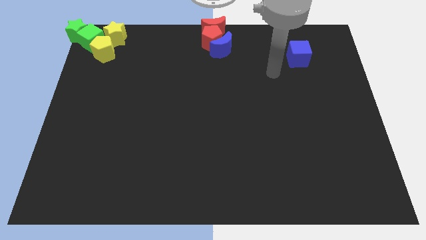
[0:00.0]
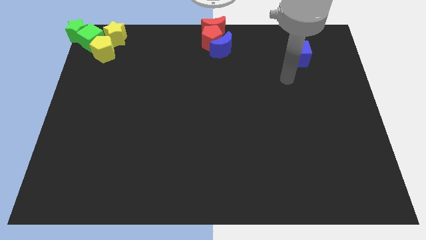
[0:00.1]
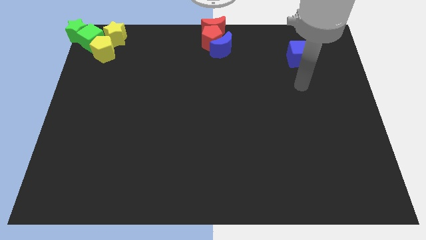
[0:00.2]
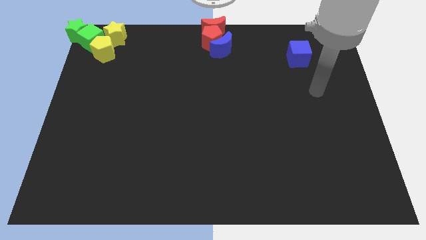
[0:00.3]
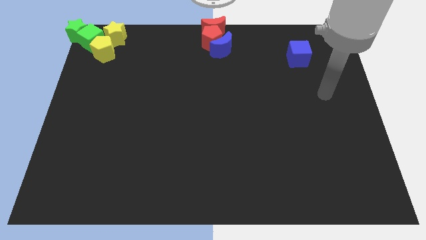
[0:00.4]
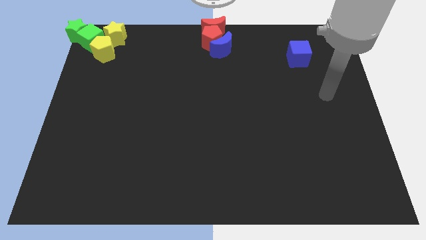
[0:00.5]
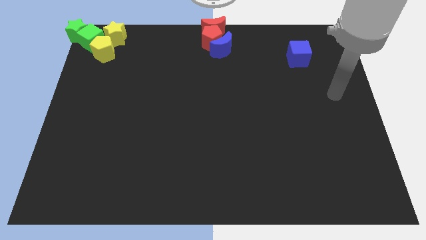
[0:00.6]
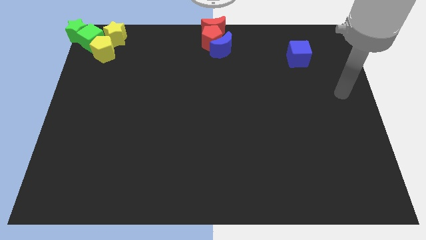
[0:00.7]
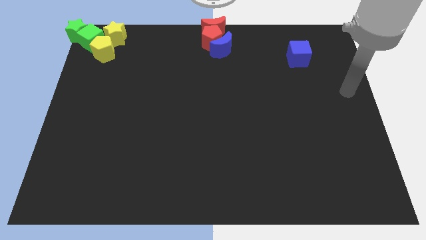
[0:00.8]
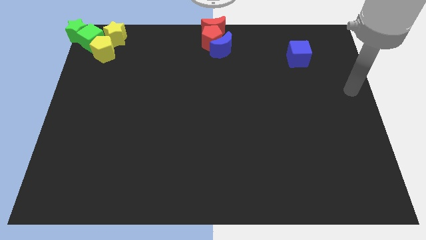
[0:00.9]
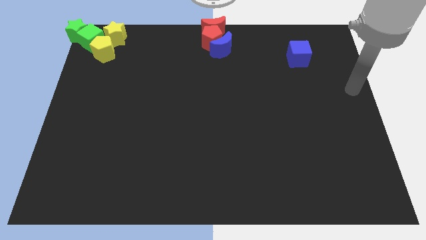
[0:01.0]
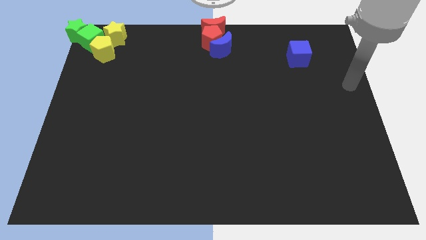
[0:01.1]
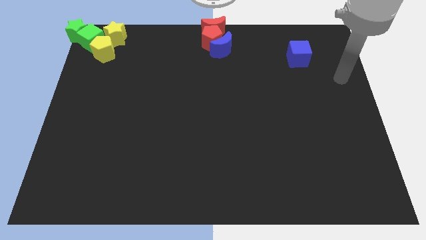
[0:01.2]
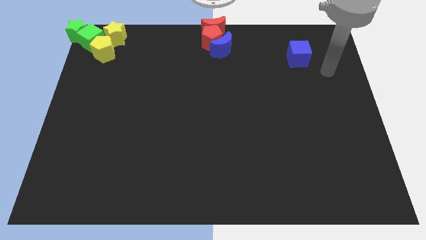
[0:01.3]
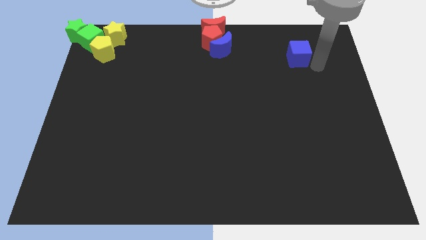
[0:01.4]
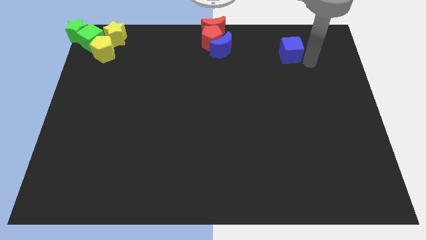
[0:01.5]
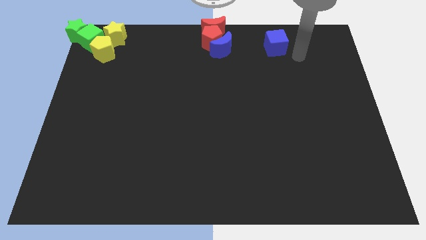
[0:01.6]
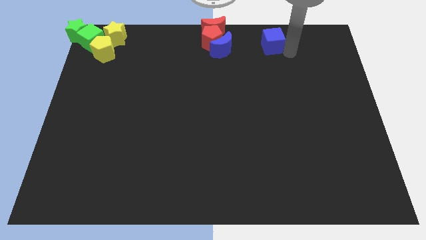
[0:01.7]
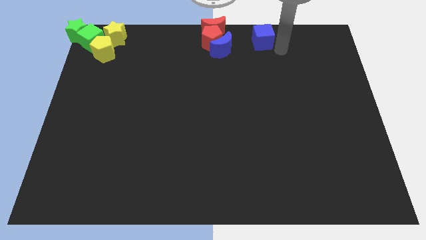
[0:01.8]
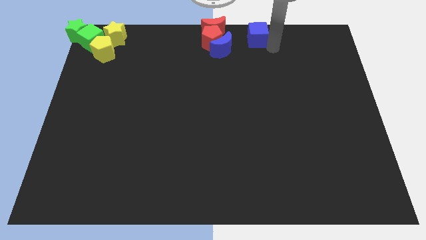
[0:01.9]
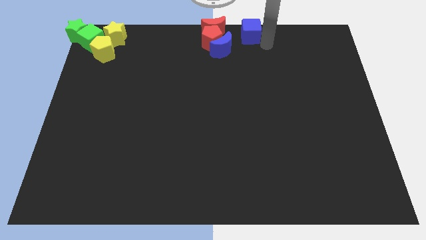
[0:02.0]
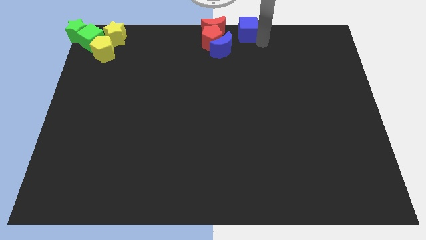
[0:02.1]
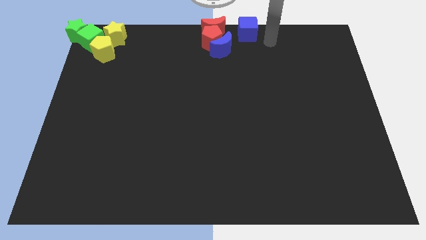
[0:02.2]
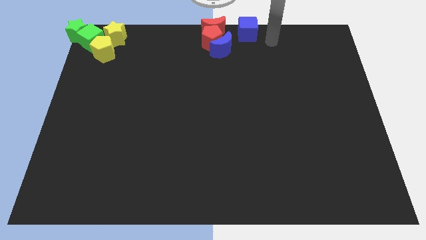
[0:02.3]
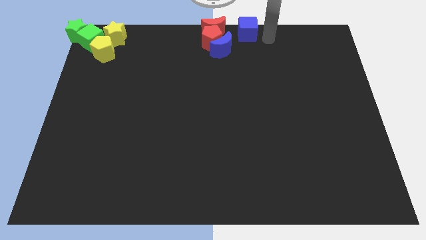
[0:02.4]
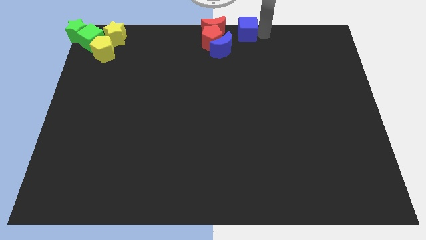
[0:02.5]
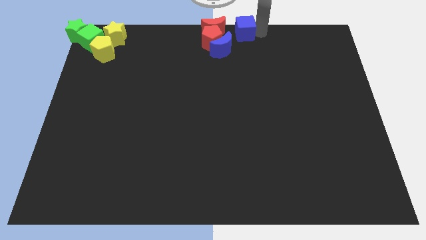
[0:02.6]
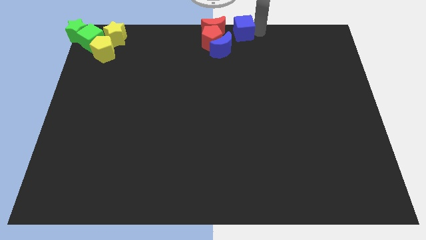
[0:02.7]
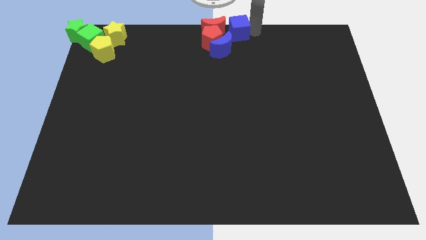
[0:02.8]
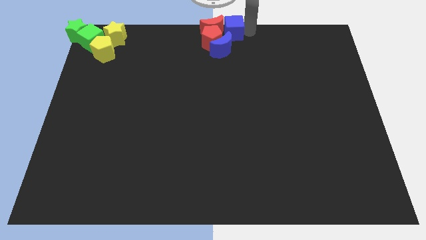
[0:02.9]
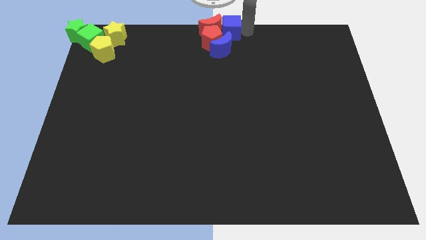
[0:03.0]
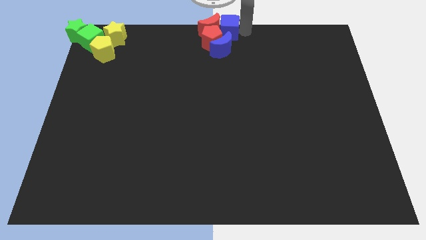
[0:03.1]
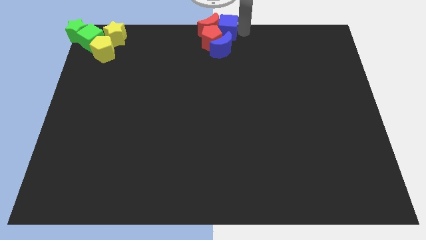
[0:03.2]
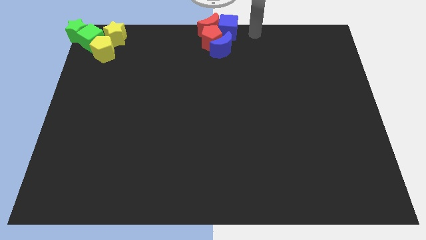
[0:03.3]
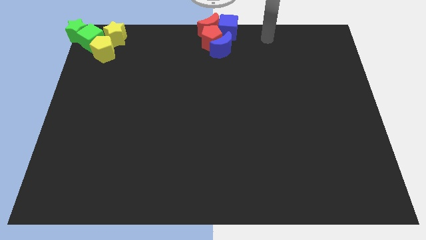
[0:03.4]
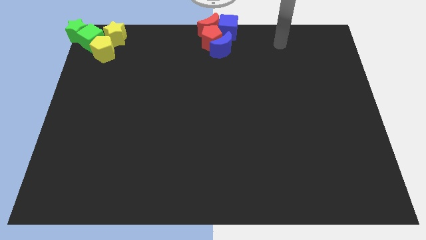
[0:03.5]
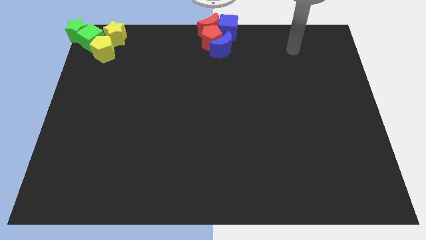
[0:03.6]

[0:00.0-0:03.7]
push the blue cube to the right side of the red moon

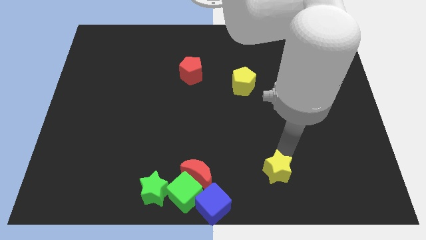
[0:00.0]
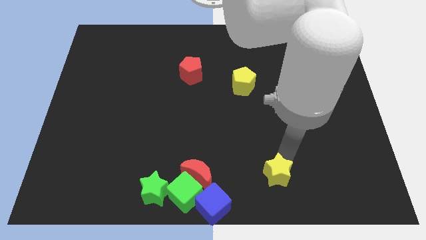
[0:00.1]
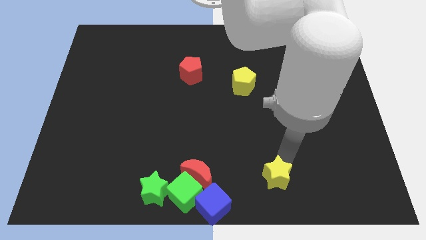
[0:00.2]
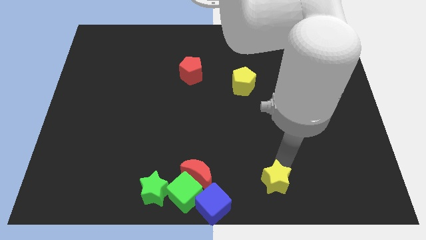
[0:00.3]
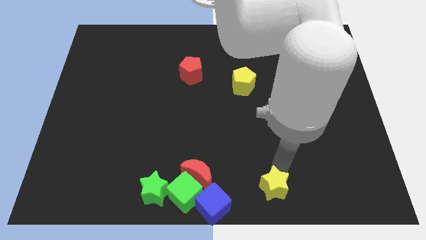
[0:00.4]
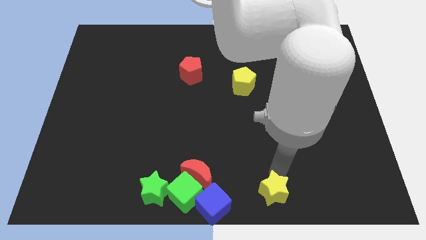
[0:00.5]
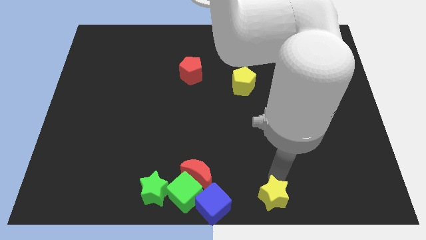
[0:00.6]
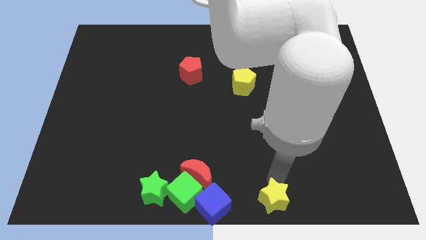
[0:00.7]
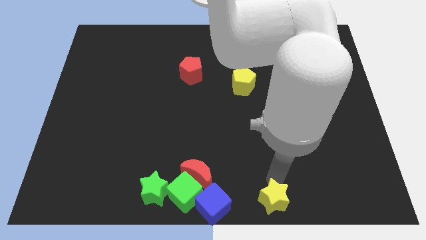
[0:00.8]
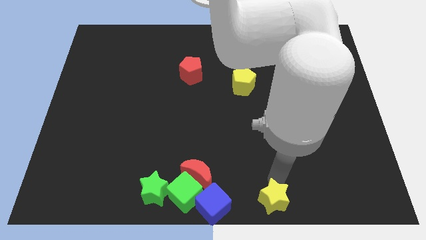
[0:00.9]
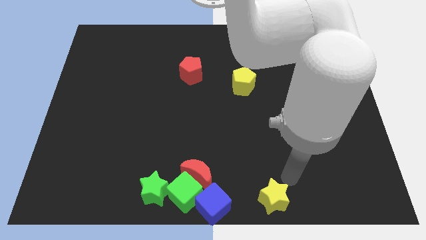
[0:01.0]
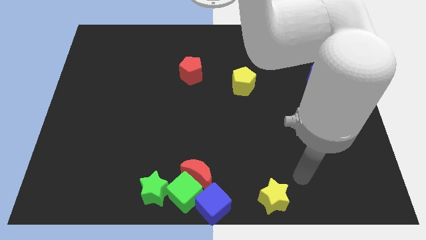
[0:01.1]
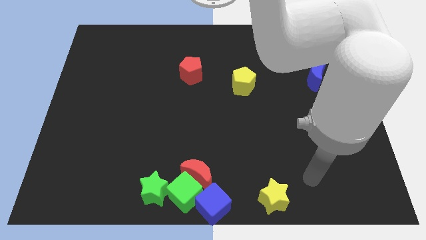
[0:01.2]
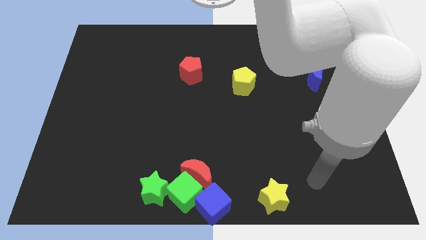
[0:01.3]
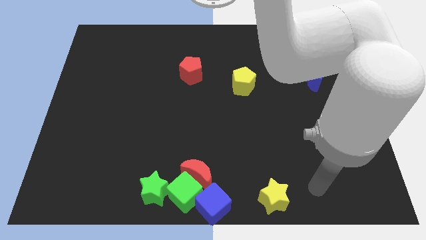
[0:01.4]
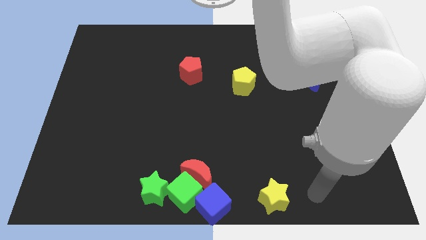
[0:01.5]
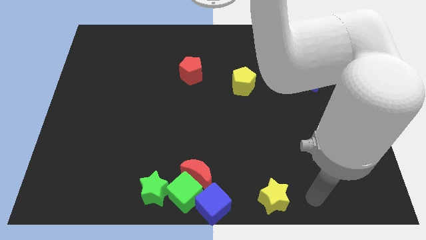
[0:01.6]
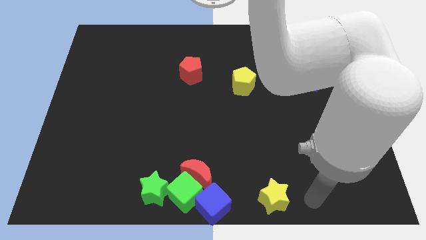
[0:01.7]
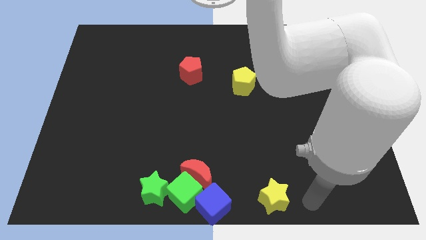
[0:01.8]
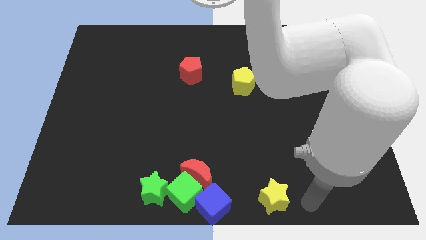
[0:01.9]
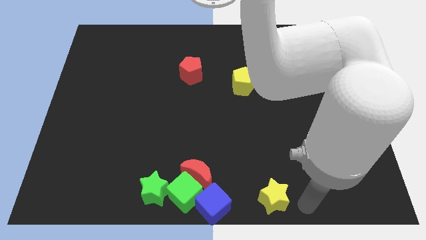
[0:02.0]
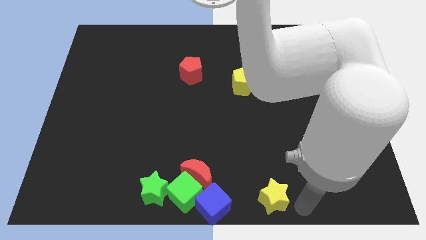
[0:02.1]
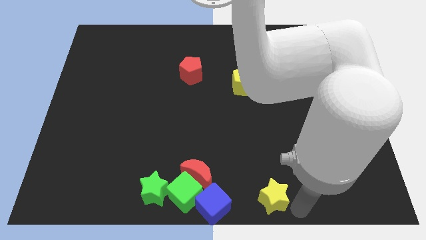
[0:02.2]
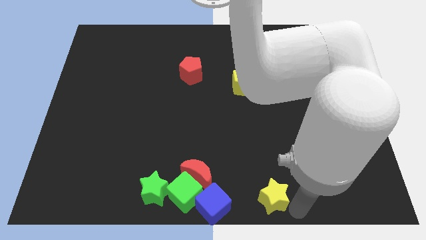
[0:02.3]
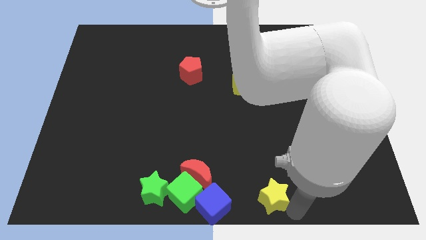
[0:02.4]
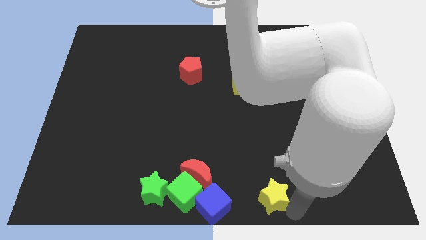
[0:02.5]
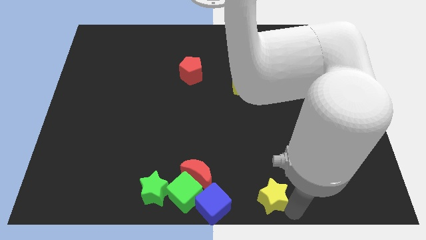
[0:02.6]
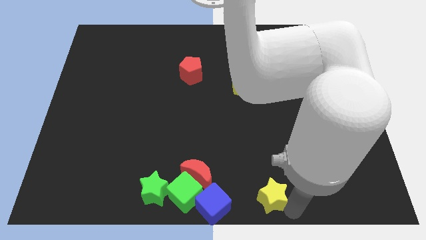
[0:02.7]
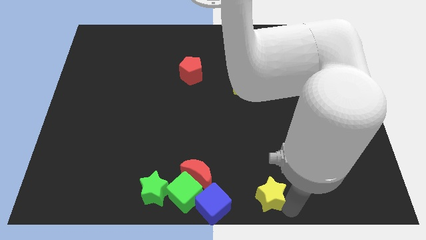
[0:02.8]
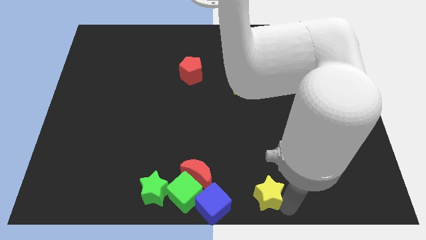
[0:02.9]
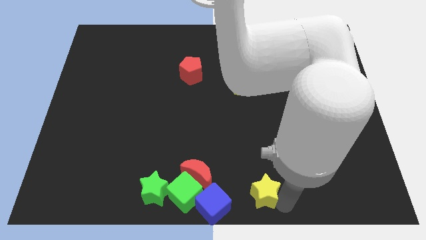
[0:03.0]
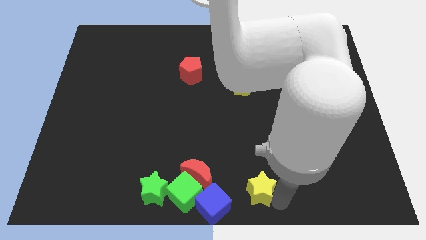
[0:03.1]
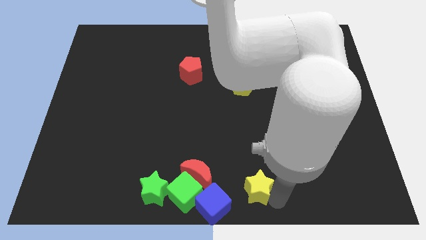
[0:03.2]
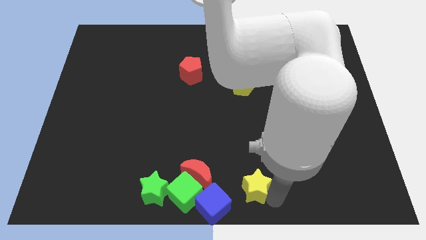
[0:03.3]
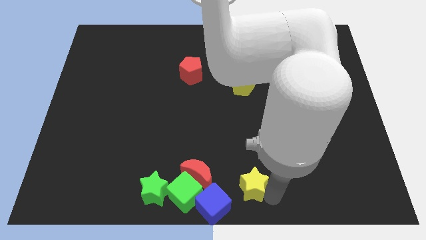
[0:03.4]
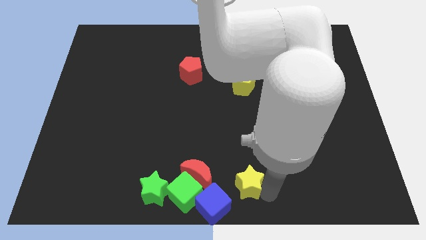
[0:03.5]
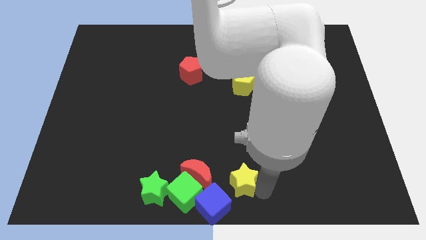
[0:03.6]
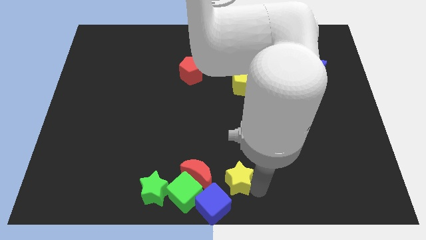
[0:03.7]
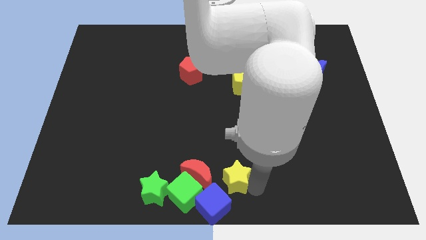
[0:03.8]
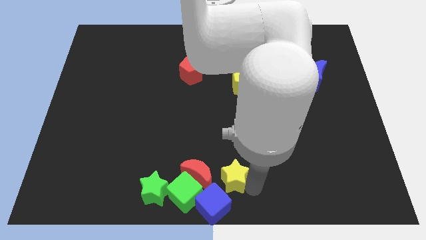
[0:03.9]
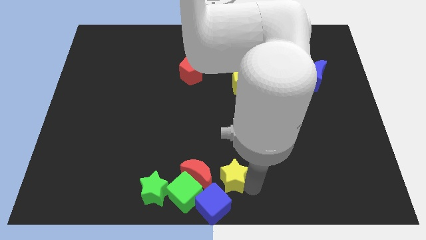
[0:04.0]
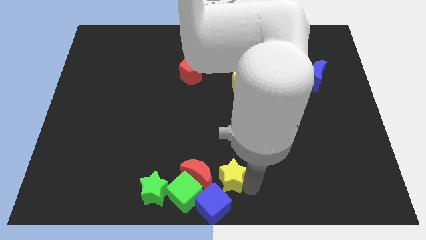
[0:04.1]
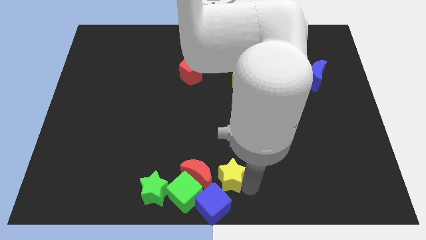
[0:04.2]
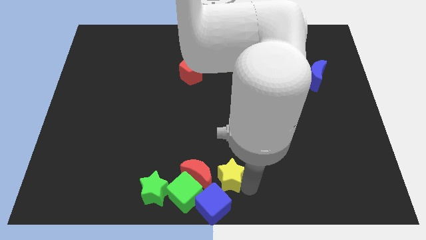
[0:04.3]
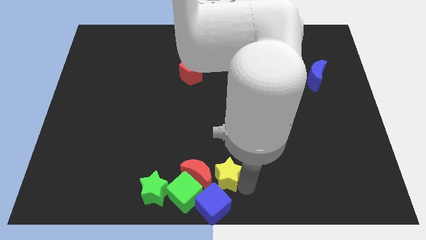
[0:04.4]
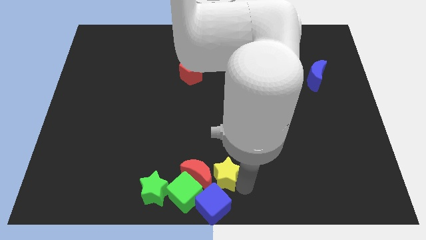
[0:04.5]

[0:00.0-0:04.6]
move the yellow star to the right of the red crescent

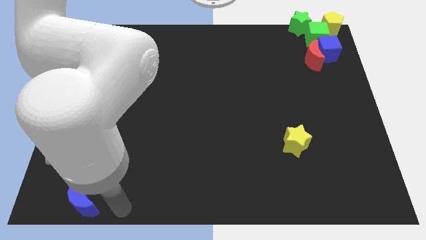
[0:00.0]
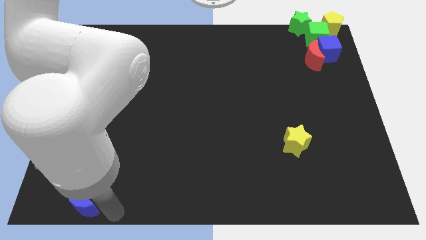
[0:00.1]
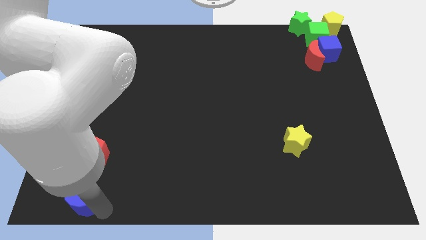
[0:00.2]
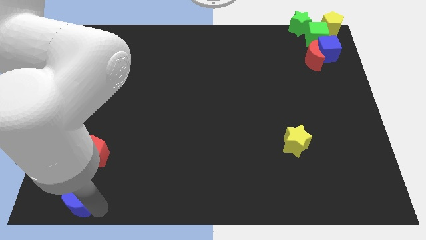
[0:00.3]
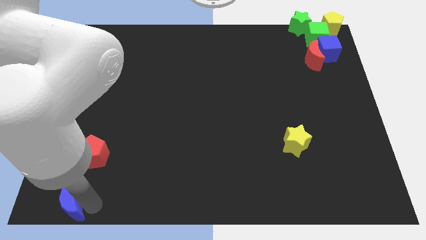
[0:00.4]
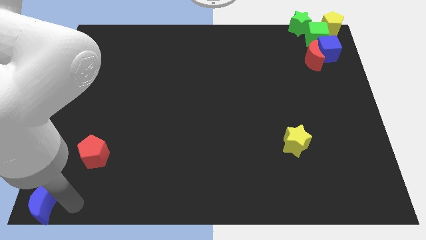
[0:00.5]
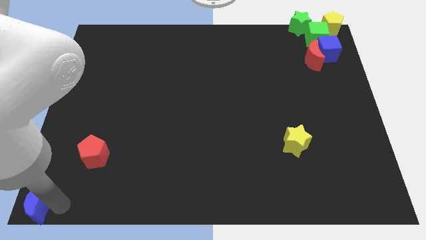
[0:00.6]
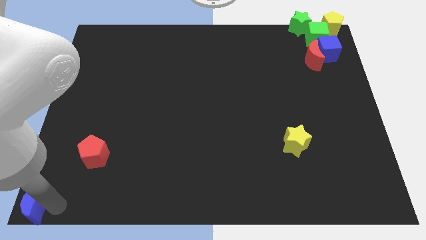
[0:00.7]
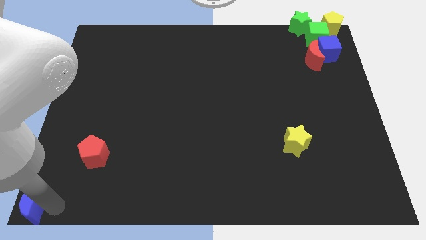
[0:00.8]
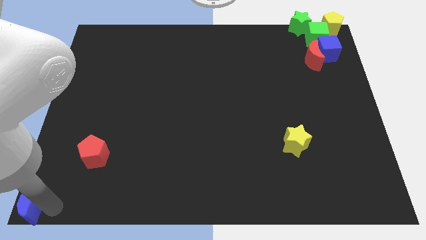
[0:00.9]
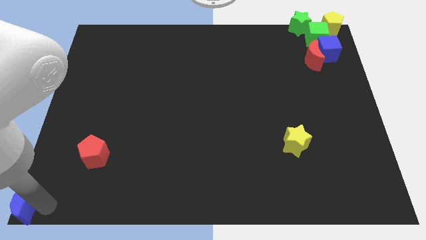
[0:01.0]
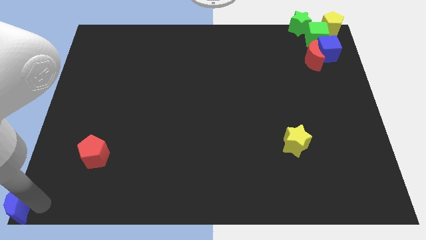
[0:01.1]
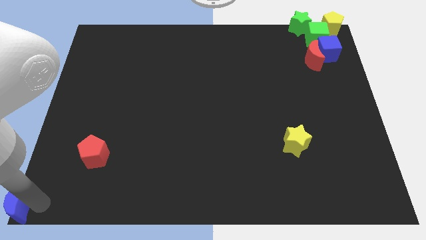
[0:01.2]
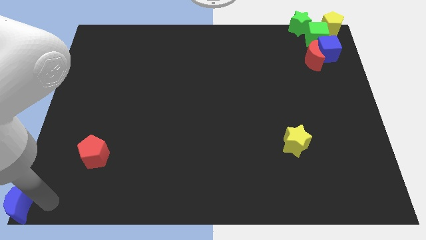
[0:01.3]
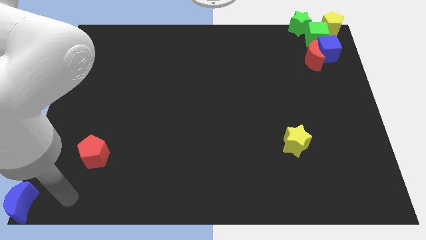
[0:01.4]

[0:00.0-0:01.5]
move the blue crescent to the bottom left corner of the board
